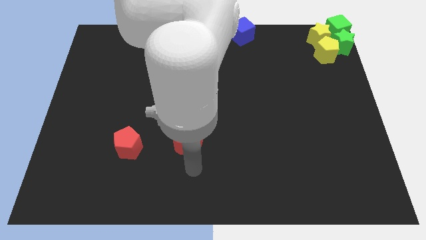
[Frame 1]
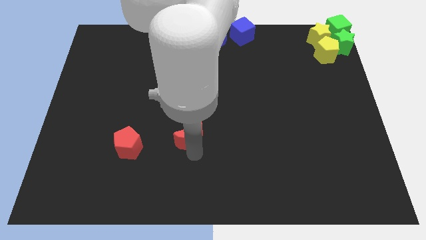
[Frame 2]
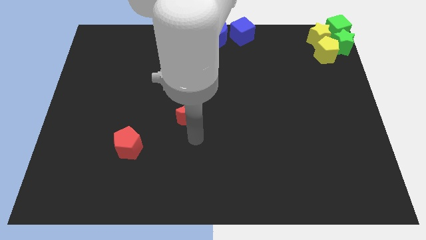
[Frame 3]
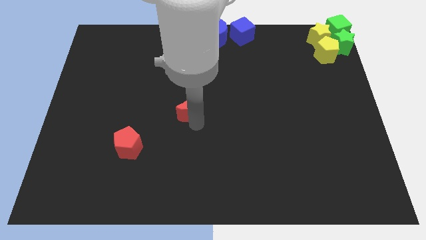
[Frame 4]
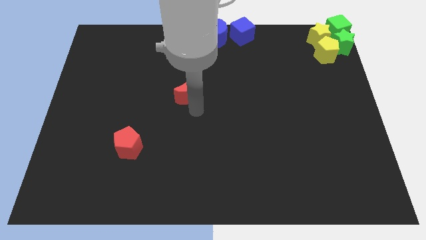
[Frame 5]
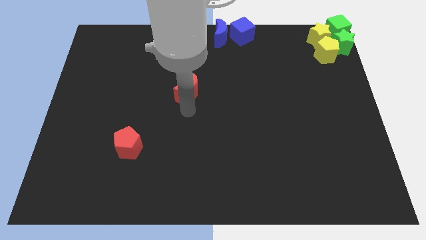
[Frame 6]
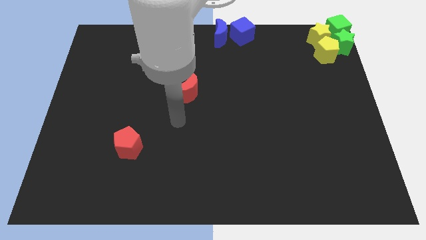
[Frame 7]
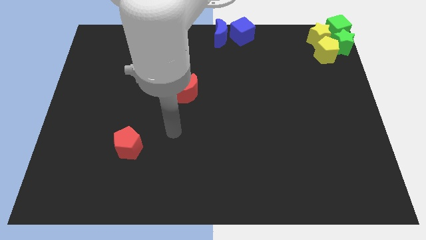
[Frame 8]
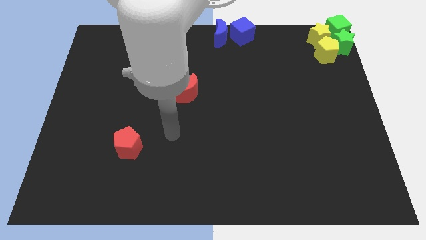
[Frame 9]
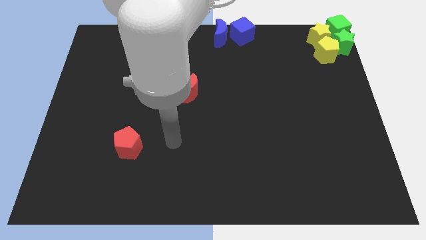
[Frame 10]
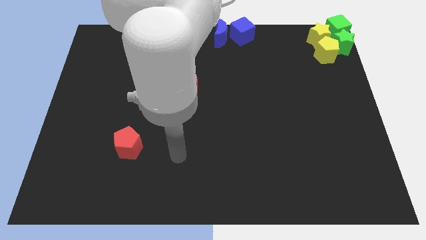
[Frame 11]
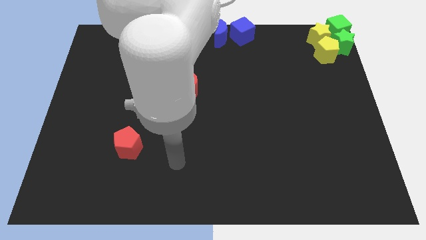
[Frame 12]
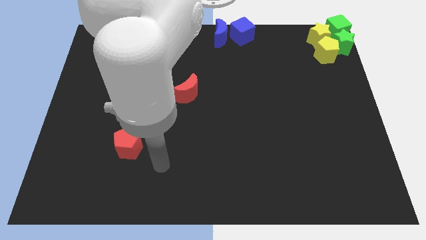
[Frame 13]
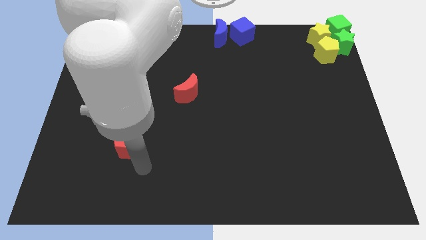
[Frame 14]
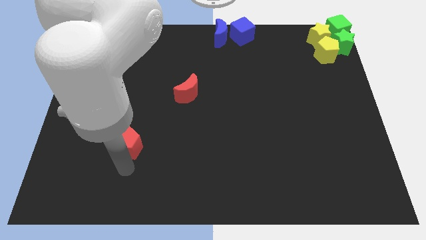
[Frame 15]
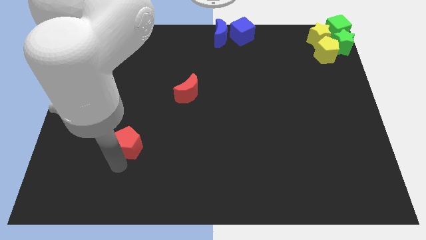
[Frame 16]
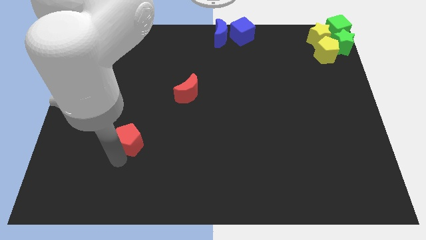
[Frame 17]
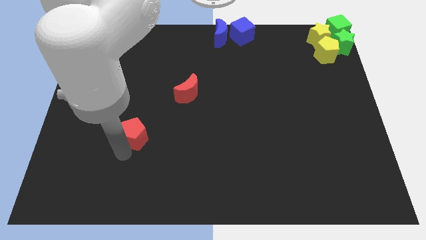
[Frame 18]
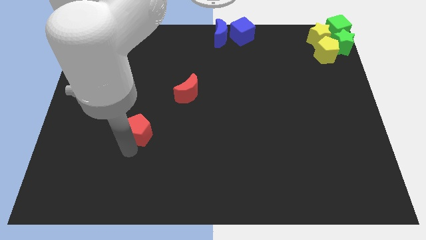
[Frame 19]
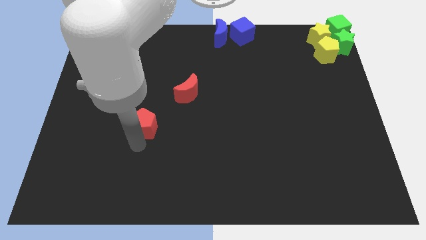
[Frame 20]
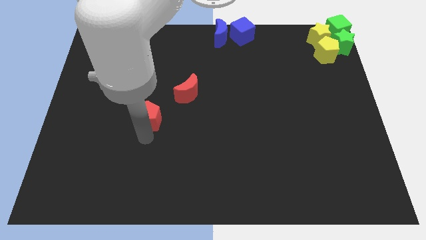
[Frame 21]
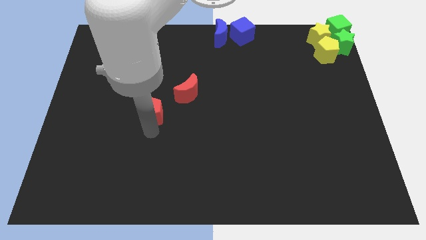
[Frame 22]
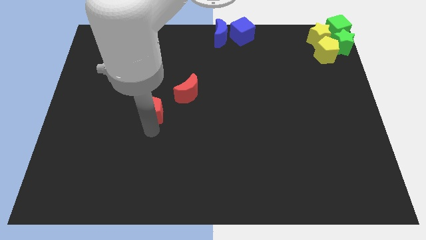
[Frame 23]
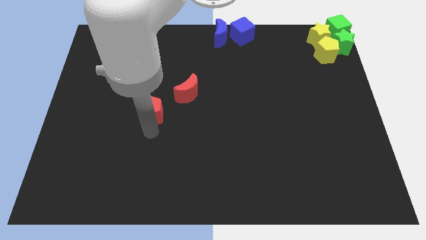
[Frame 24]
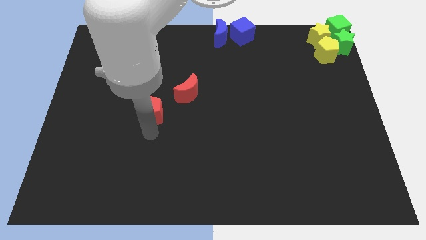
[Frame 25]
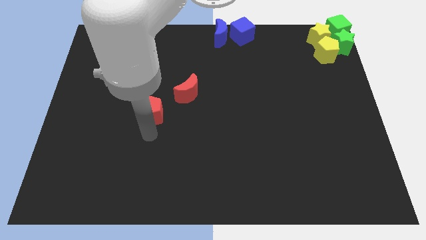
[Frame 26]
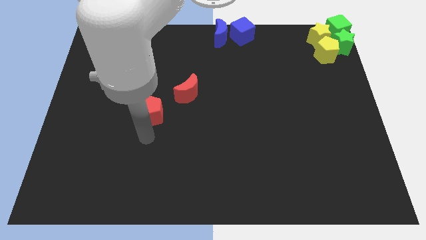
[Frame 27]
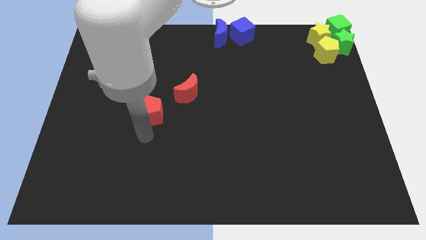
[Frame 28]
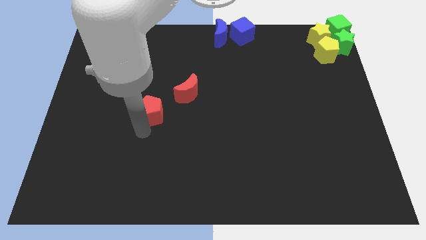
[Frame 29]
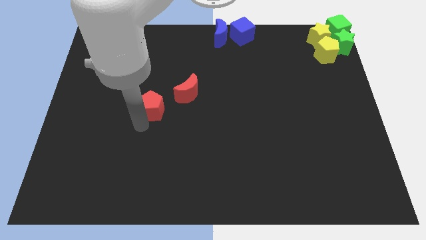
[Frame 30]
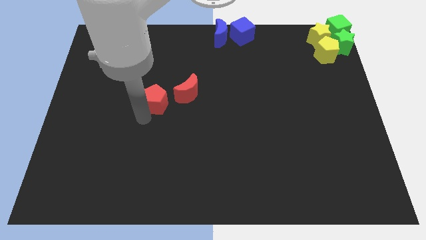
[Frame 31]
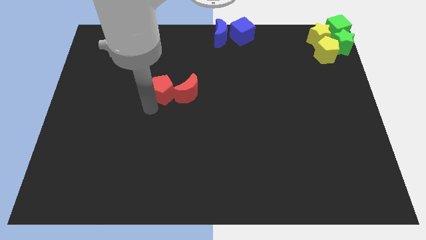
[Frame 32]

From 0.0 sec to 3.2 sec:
move the red pentagon parallel to the left side of the red moon

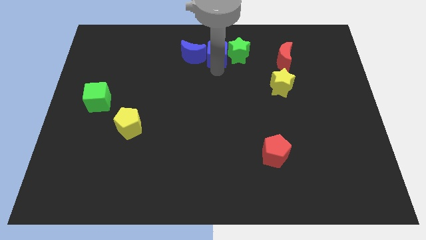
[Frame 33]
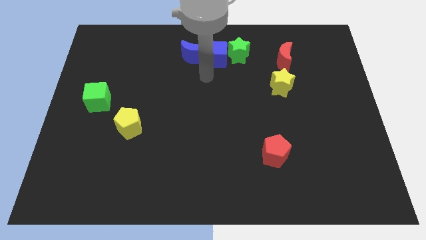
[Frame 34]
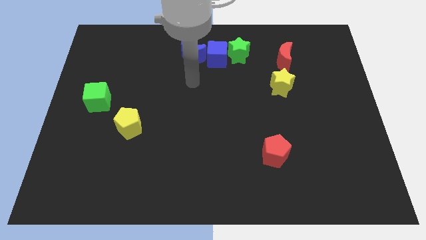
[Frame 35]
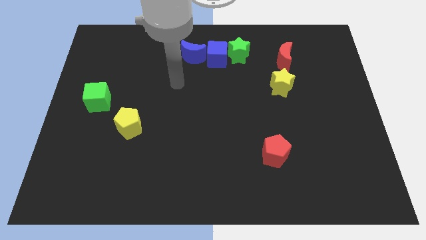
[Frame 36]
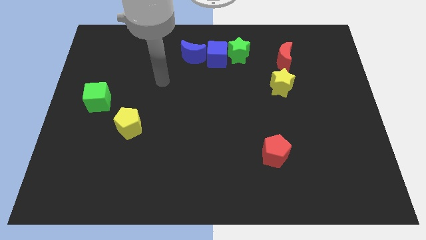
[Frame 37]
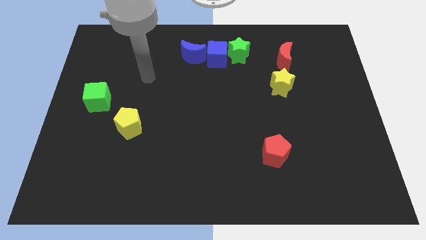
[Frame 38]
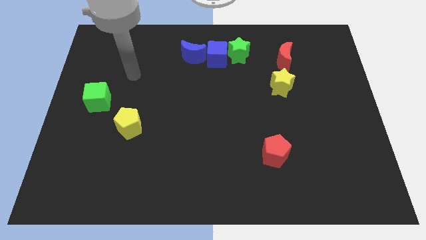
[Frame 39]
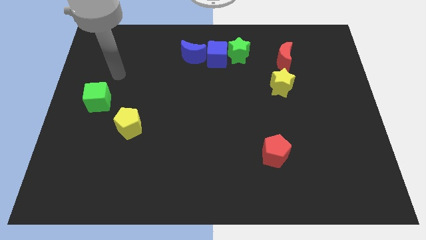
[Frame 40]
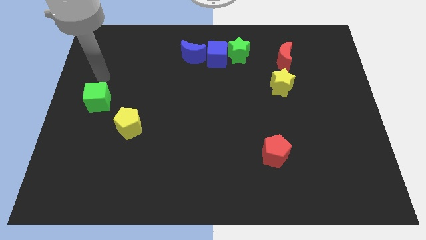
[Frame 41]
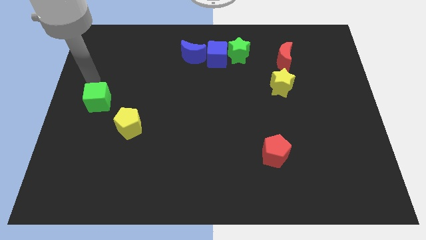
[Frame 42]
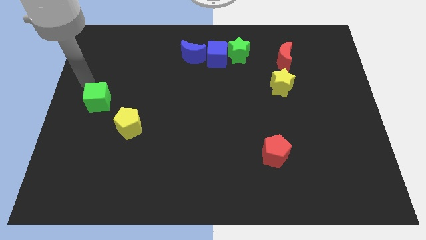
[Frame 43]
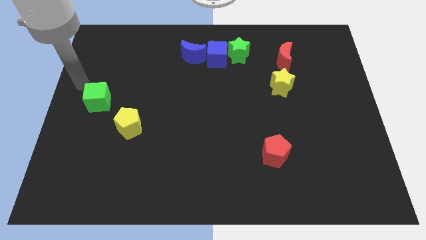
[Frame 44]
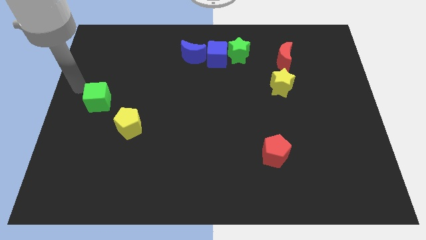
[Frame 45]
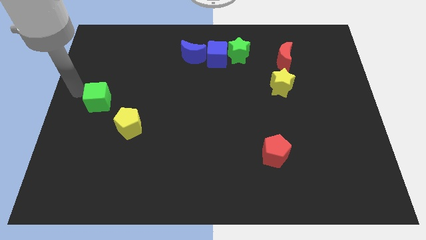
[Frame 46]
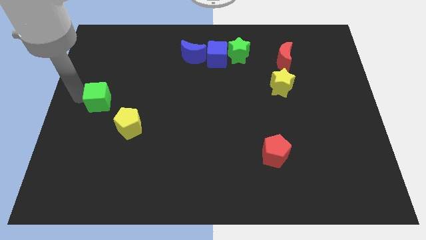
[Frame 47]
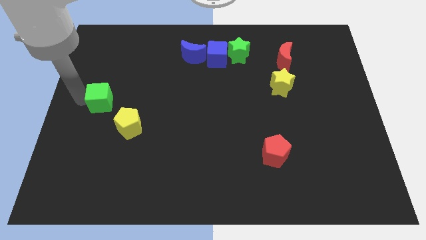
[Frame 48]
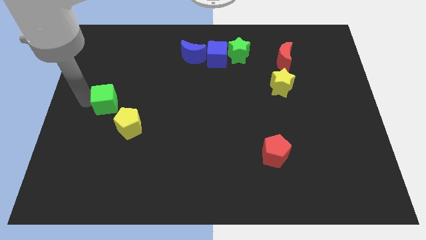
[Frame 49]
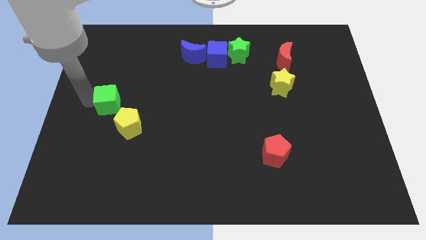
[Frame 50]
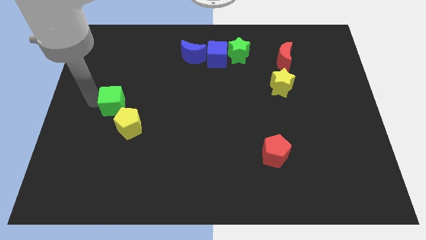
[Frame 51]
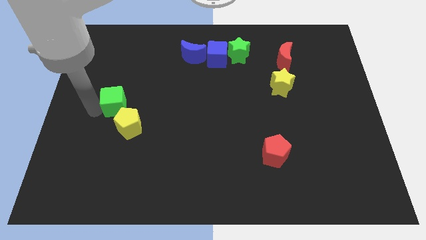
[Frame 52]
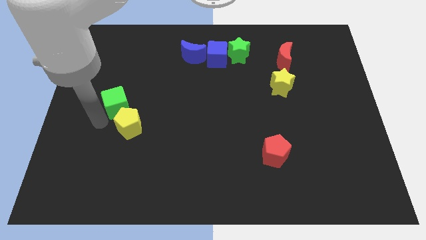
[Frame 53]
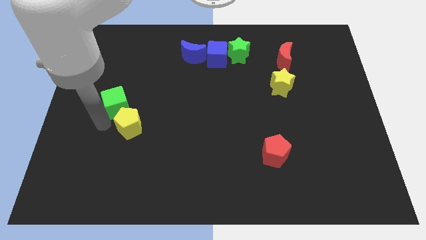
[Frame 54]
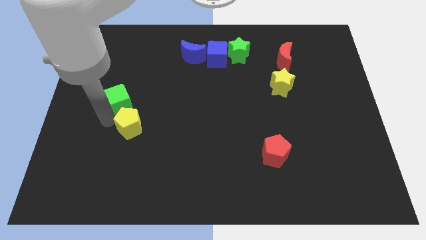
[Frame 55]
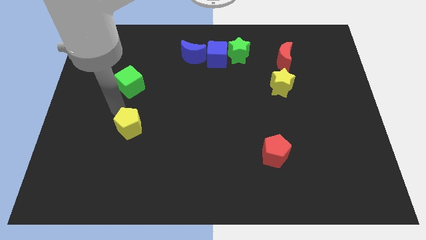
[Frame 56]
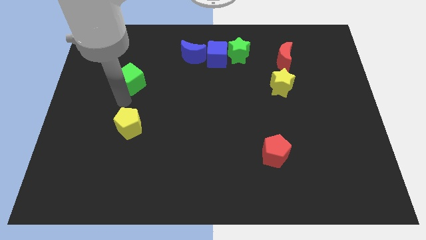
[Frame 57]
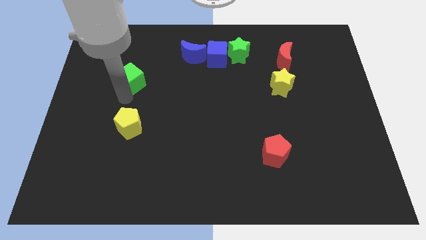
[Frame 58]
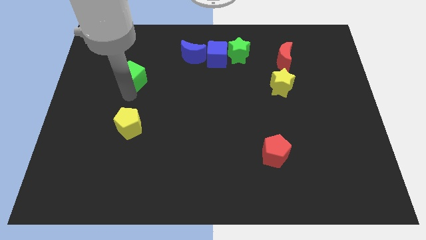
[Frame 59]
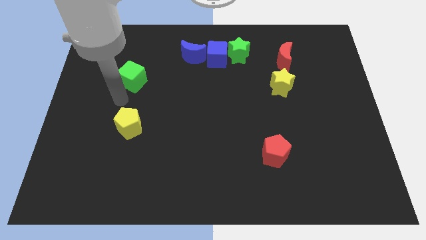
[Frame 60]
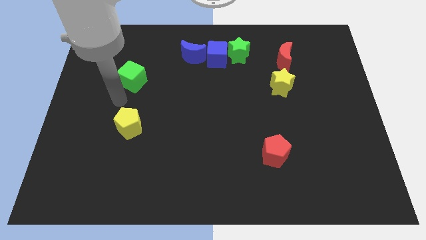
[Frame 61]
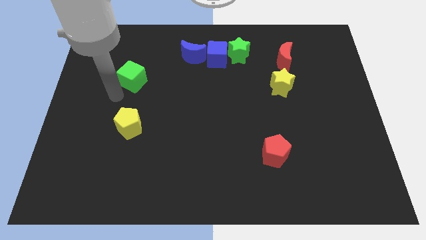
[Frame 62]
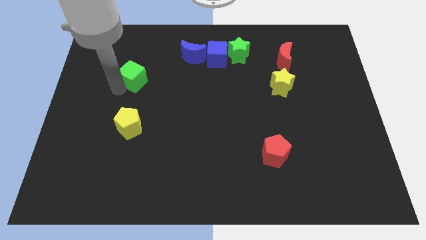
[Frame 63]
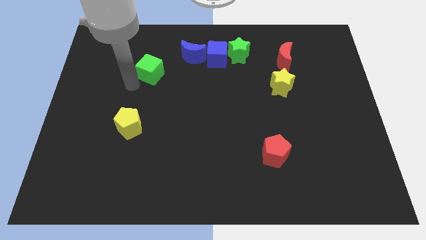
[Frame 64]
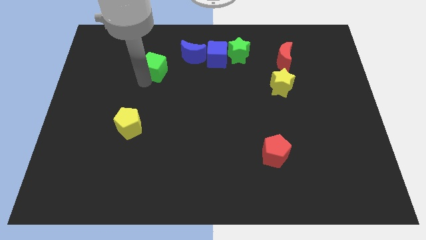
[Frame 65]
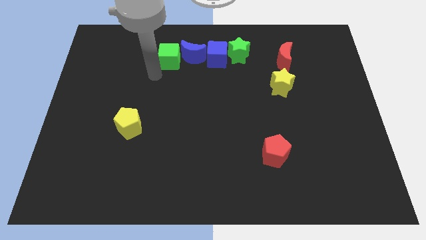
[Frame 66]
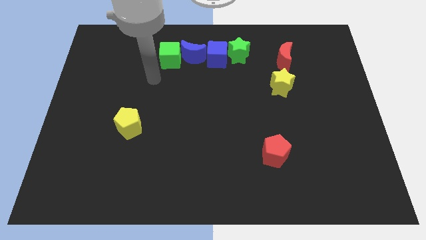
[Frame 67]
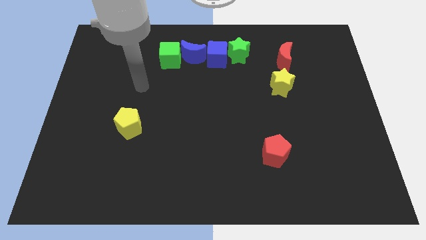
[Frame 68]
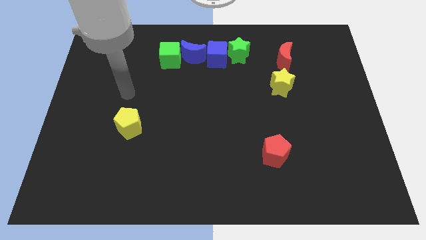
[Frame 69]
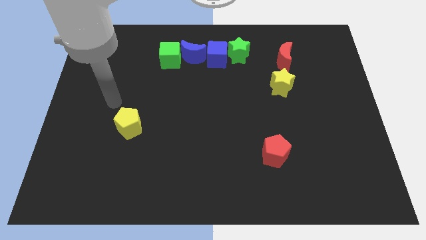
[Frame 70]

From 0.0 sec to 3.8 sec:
place the green cube to the left side of the blue crescent

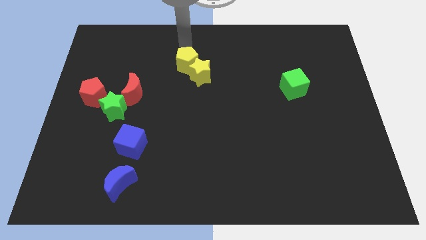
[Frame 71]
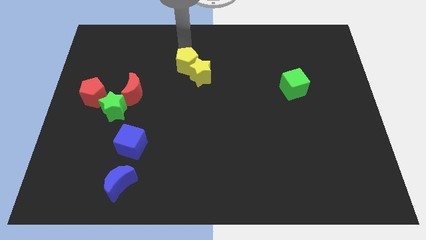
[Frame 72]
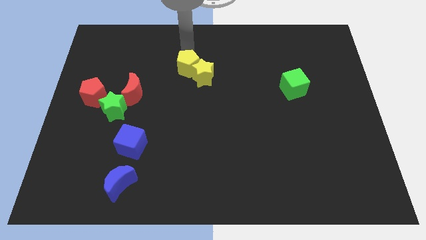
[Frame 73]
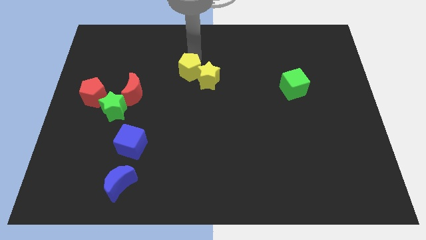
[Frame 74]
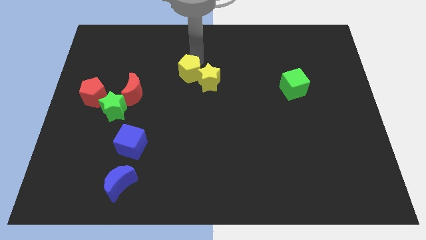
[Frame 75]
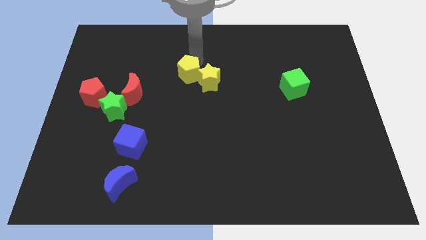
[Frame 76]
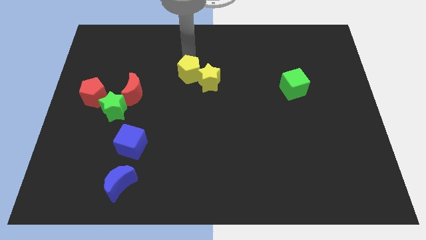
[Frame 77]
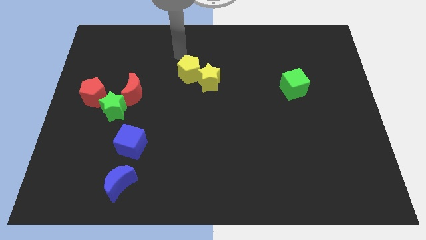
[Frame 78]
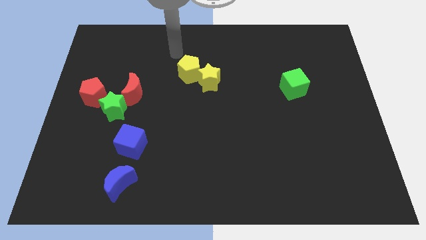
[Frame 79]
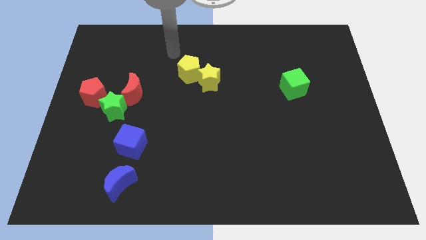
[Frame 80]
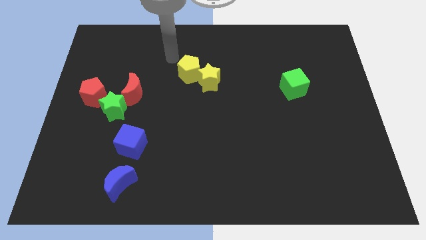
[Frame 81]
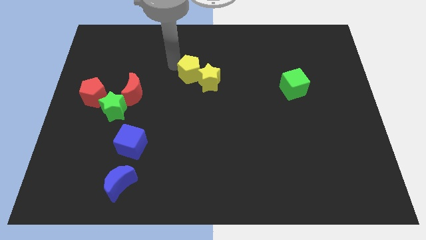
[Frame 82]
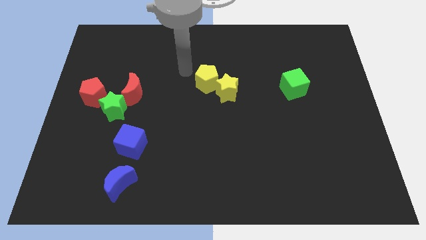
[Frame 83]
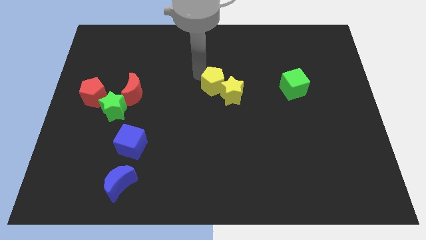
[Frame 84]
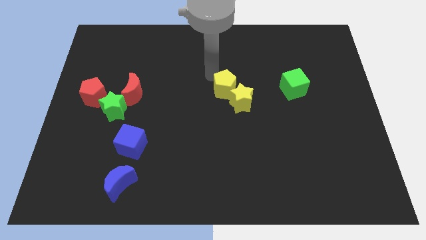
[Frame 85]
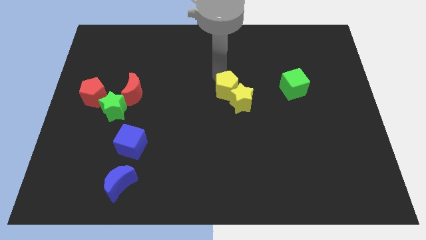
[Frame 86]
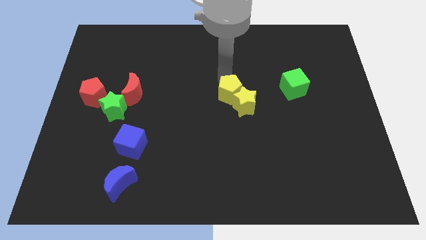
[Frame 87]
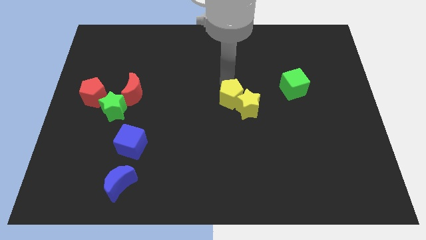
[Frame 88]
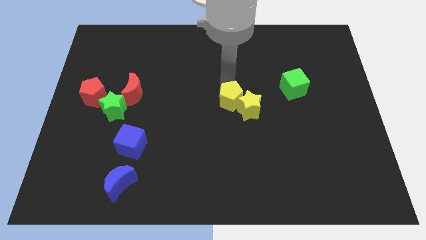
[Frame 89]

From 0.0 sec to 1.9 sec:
push the yellow star with the yellow pentagon to the center of the board

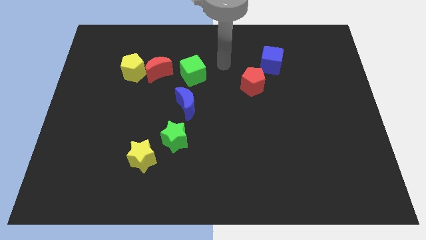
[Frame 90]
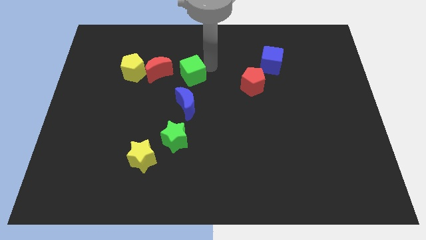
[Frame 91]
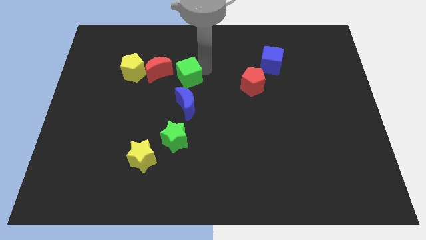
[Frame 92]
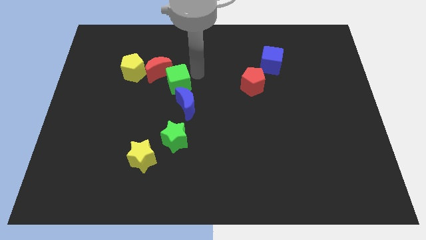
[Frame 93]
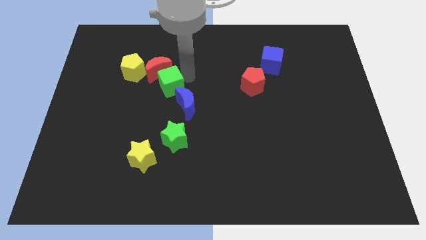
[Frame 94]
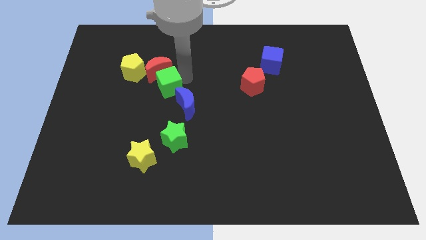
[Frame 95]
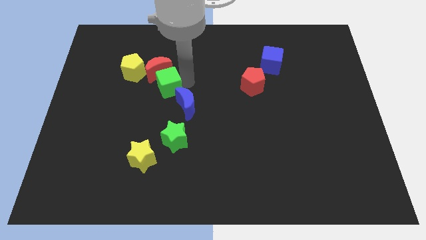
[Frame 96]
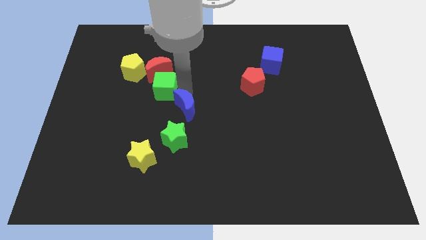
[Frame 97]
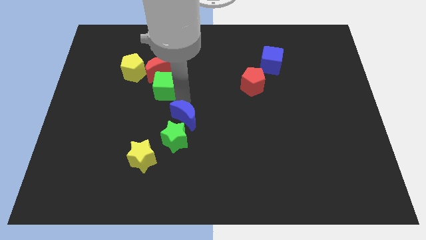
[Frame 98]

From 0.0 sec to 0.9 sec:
push the green cube down to the red moon
